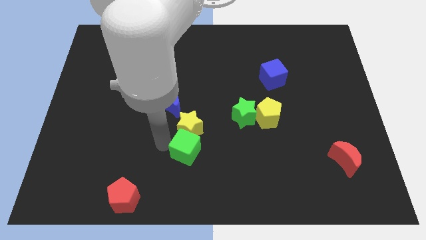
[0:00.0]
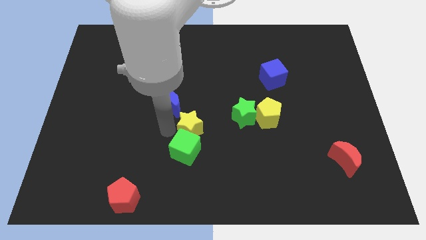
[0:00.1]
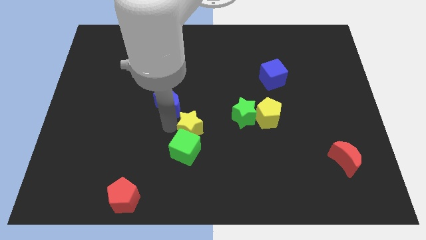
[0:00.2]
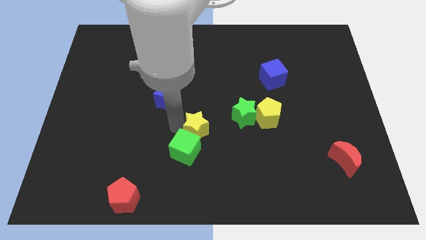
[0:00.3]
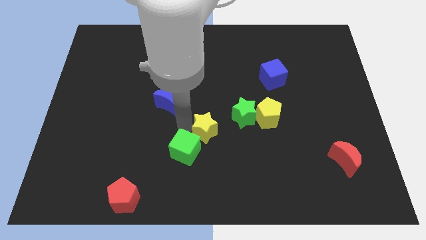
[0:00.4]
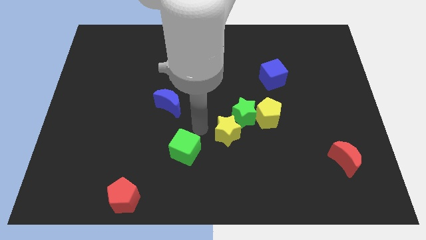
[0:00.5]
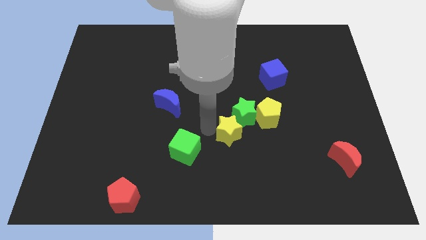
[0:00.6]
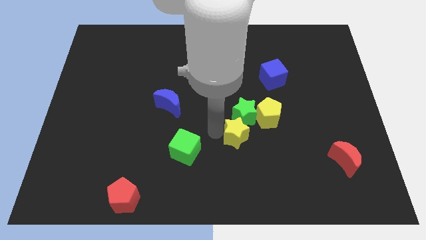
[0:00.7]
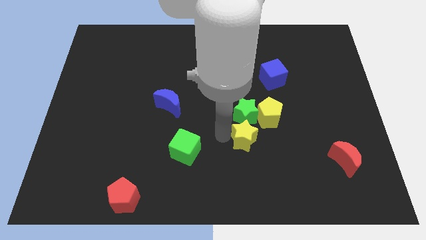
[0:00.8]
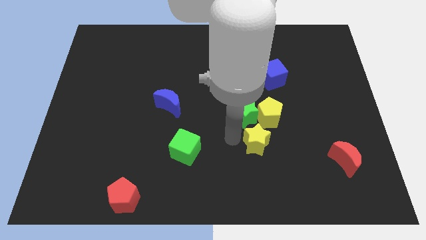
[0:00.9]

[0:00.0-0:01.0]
move the yellow star below the green star

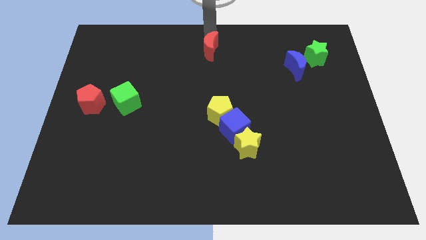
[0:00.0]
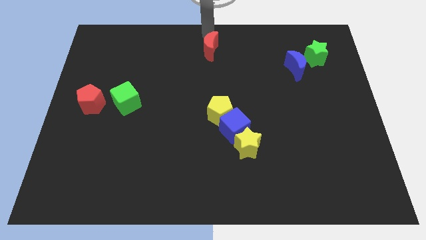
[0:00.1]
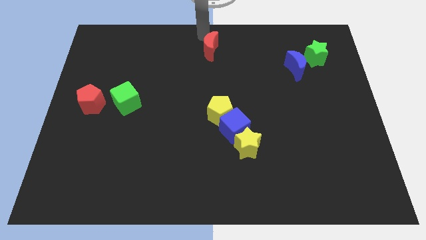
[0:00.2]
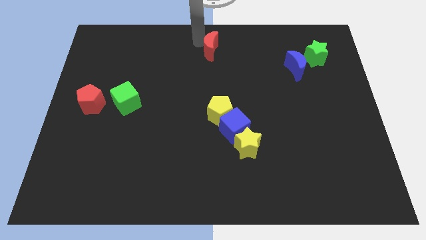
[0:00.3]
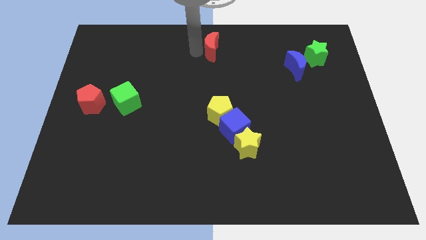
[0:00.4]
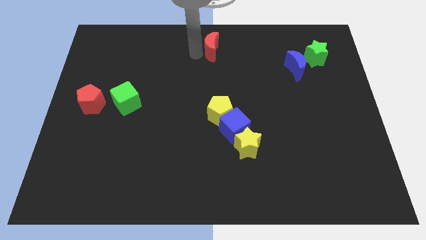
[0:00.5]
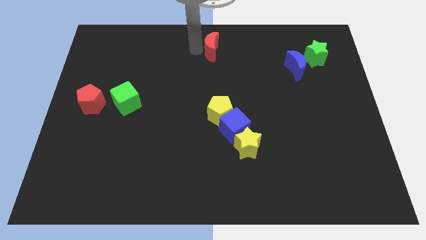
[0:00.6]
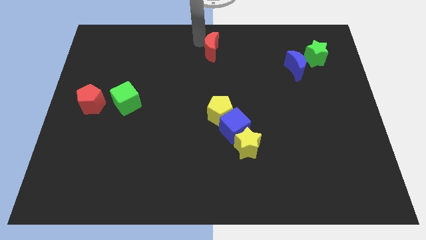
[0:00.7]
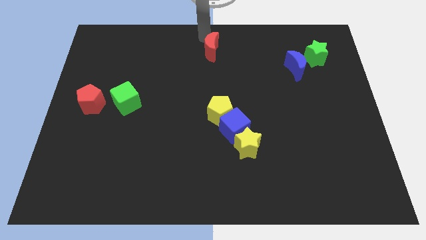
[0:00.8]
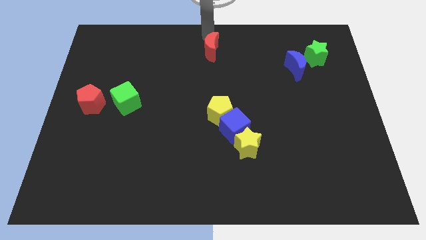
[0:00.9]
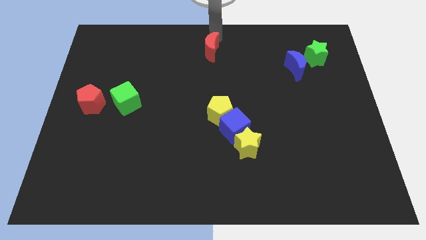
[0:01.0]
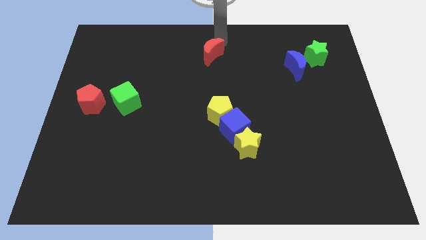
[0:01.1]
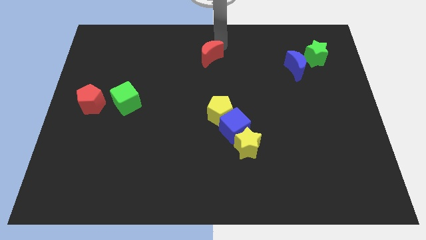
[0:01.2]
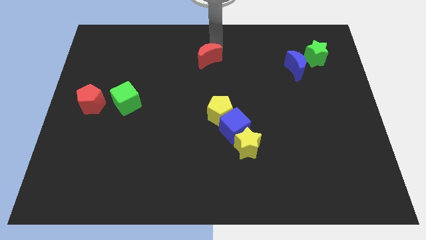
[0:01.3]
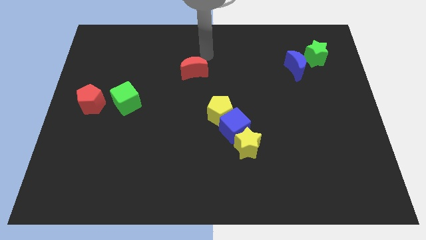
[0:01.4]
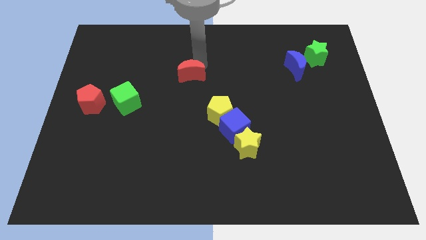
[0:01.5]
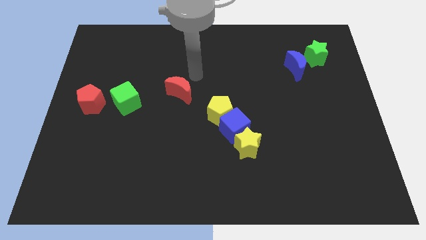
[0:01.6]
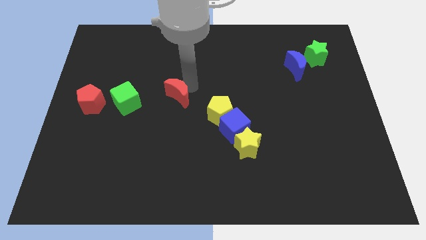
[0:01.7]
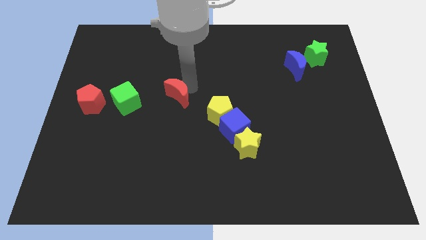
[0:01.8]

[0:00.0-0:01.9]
slide the red moon towards the bottom side of the board

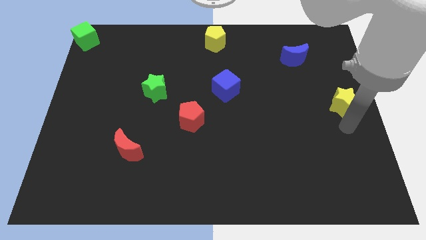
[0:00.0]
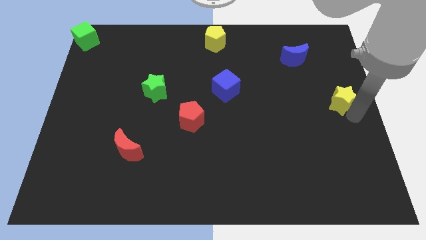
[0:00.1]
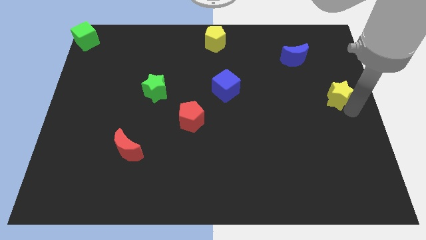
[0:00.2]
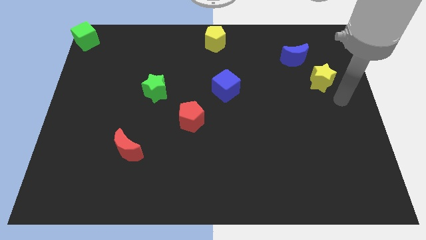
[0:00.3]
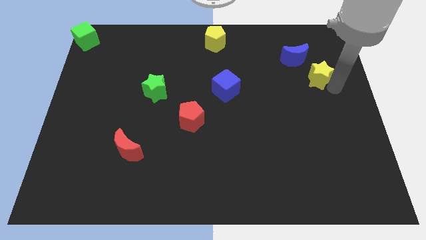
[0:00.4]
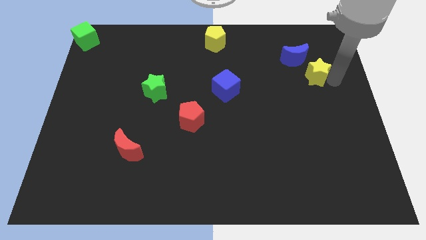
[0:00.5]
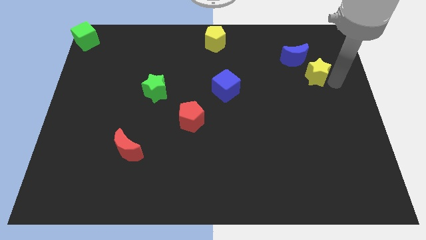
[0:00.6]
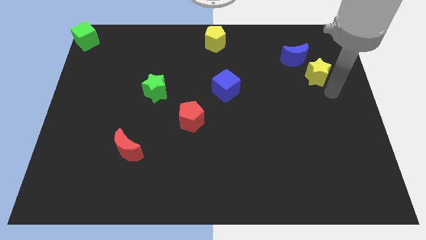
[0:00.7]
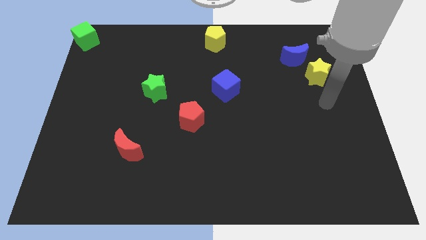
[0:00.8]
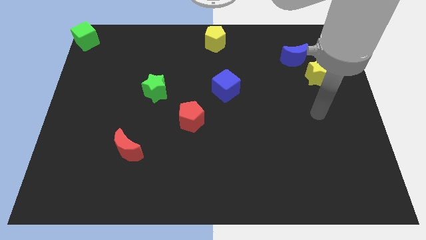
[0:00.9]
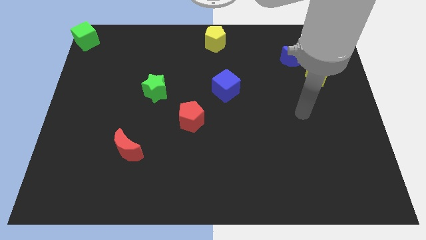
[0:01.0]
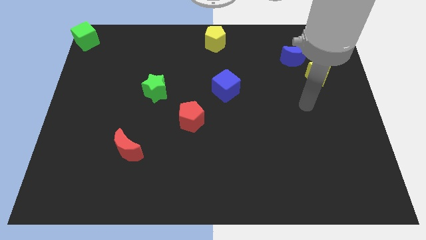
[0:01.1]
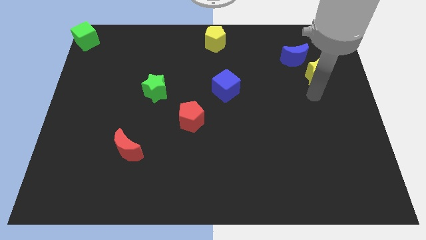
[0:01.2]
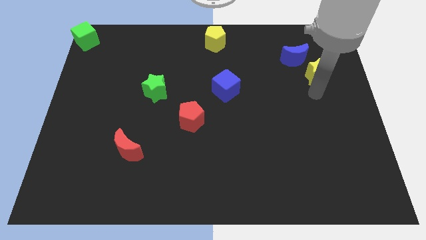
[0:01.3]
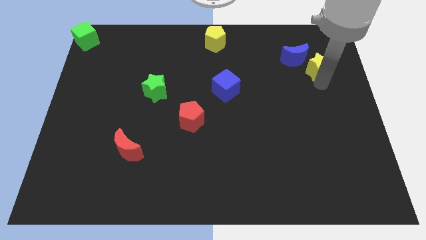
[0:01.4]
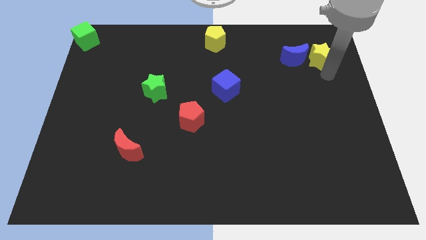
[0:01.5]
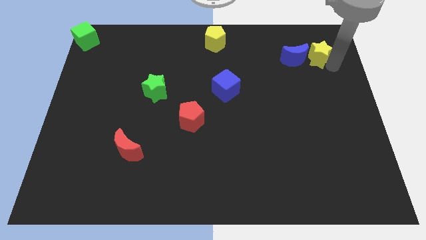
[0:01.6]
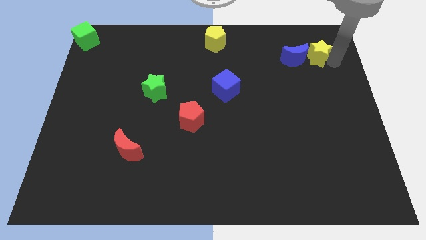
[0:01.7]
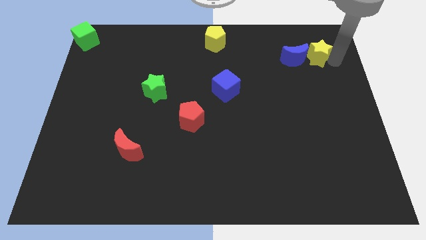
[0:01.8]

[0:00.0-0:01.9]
put the yellow star on the right side of the blue crescent

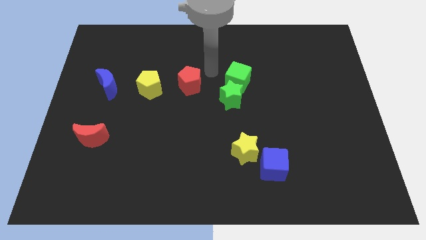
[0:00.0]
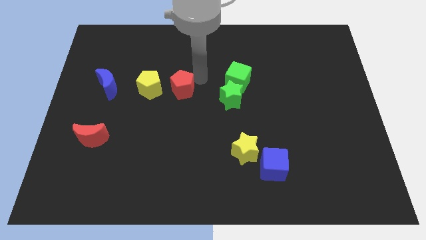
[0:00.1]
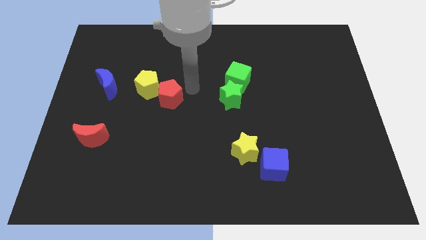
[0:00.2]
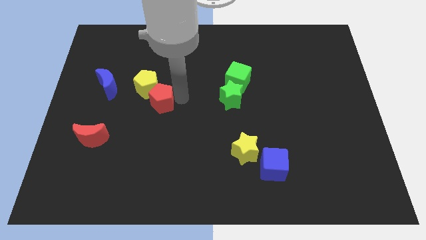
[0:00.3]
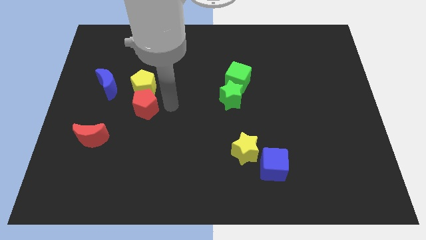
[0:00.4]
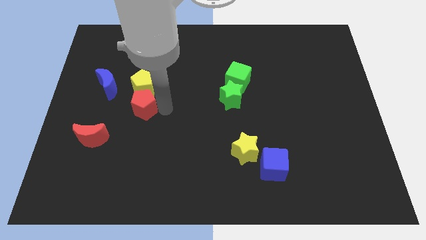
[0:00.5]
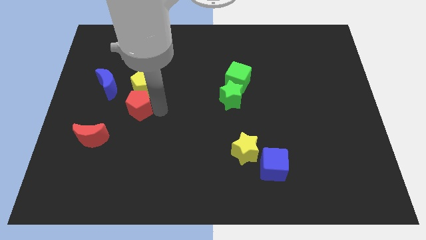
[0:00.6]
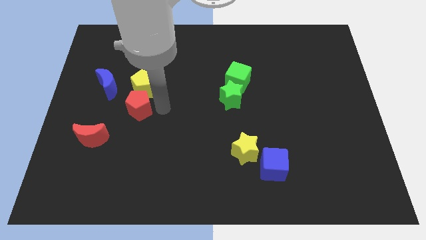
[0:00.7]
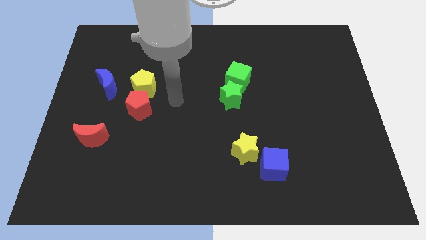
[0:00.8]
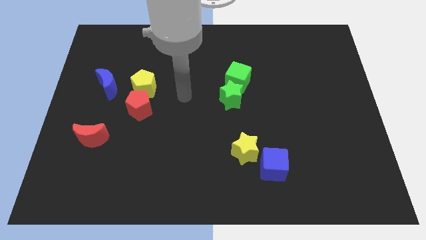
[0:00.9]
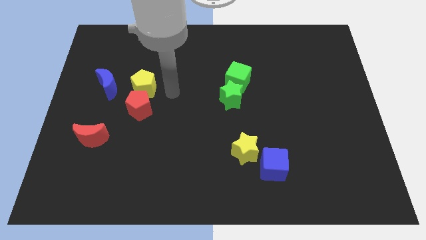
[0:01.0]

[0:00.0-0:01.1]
place the red pentagon below the yellow pentagon

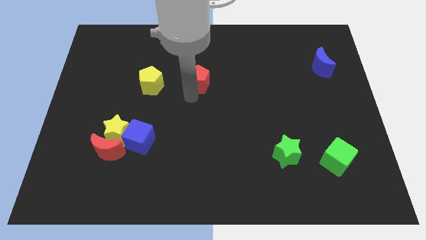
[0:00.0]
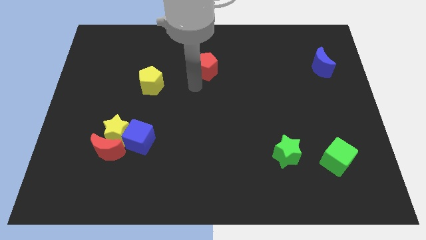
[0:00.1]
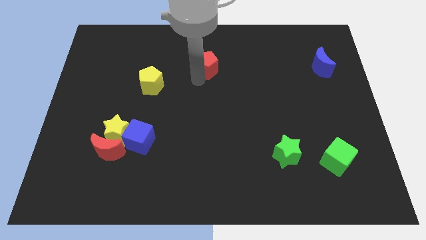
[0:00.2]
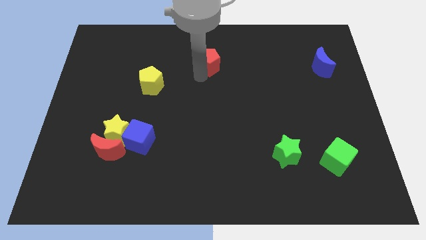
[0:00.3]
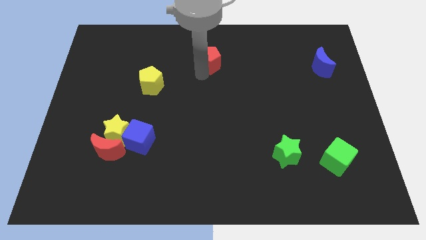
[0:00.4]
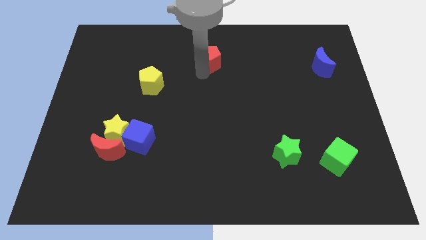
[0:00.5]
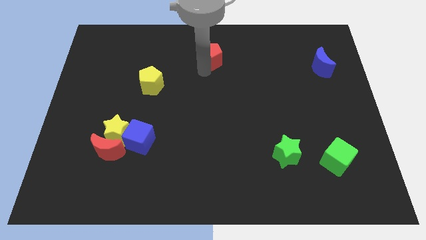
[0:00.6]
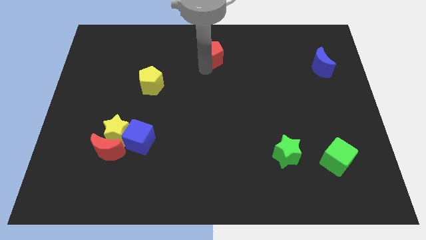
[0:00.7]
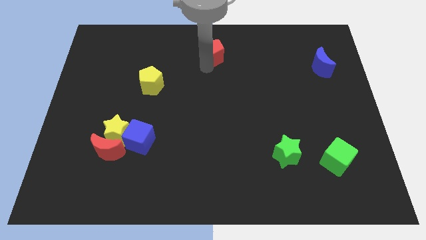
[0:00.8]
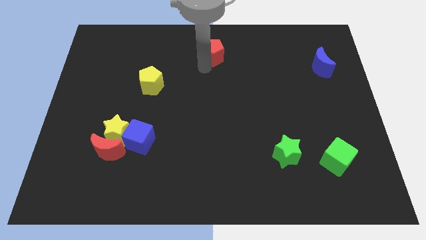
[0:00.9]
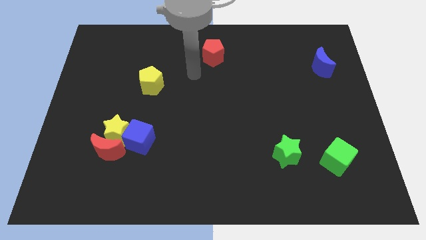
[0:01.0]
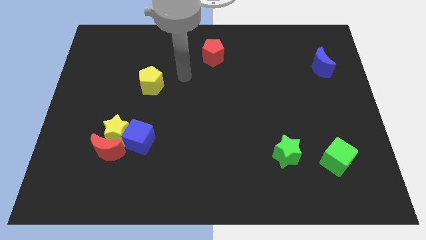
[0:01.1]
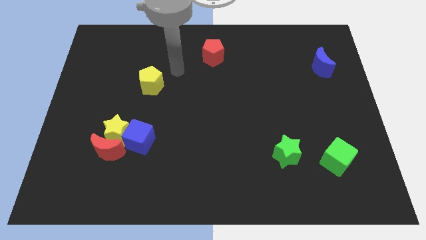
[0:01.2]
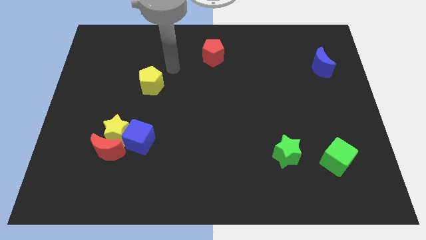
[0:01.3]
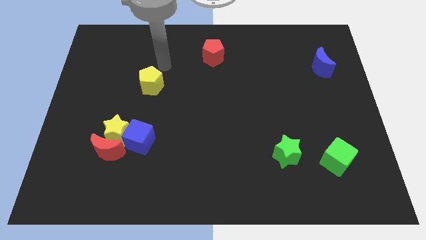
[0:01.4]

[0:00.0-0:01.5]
push the red pentagon diagonally top right to the yellow pentagon

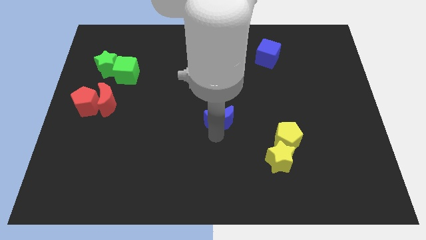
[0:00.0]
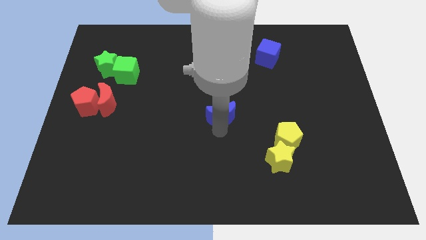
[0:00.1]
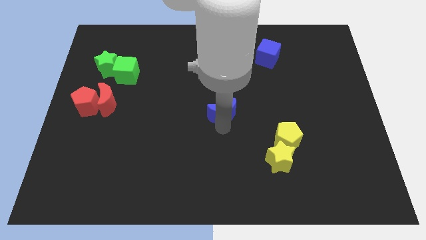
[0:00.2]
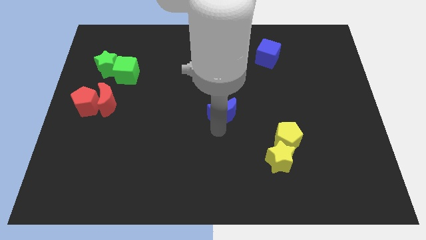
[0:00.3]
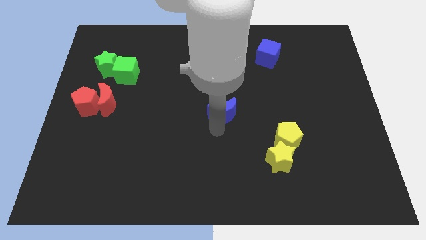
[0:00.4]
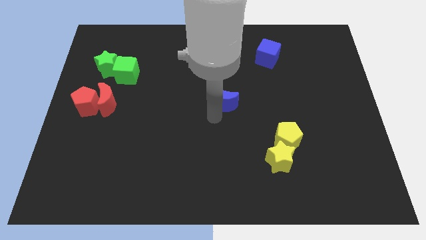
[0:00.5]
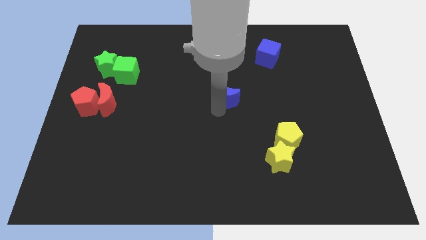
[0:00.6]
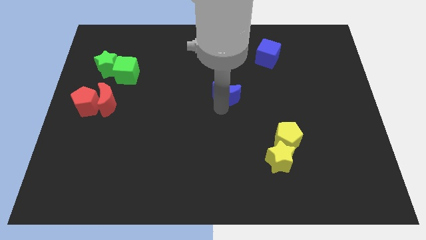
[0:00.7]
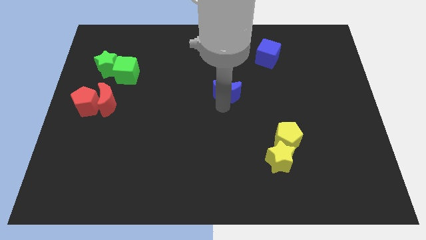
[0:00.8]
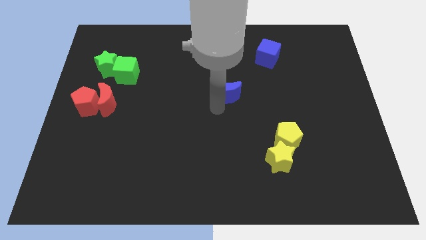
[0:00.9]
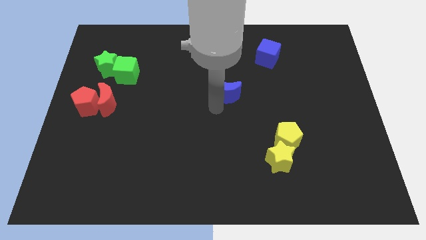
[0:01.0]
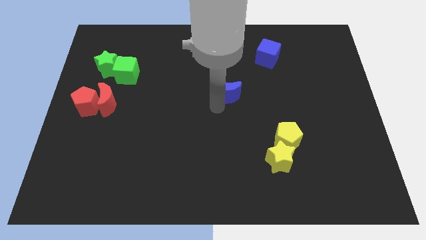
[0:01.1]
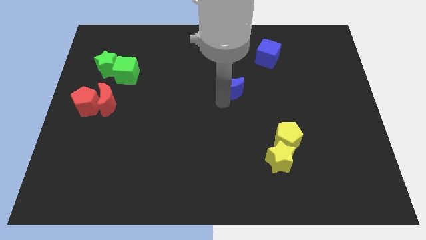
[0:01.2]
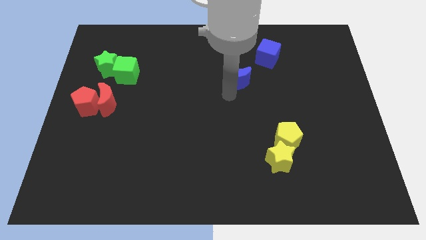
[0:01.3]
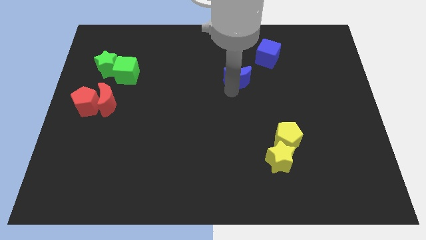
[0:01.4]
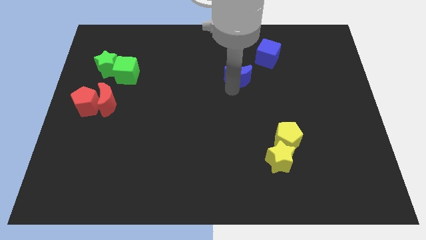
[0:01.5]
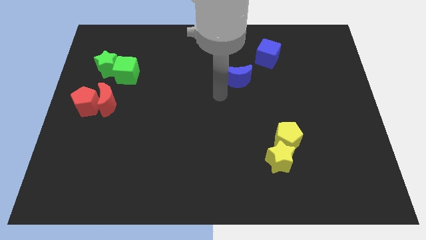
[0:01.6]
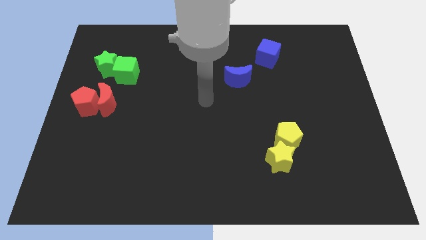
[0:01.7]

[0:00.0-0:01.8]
move the blue moon towards the blue cube
